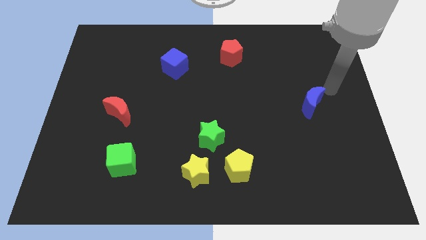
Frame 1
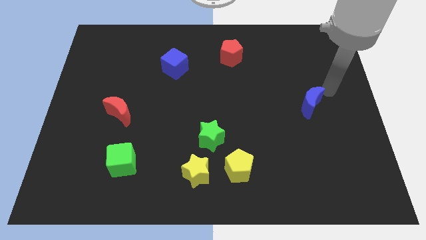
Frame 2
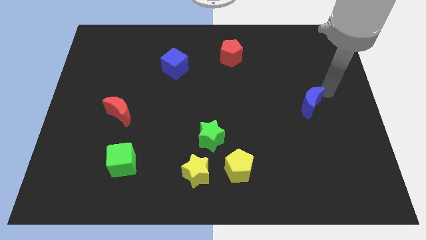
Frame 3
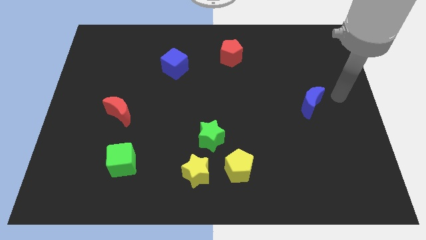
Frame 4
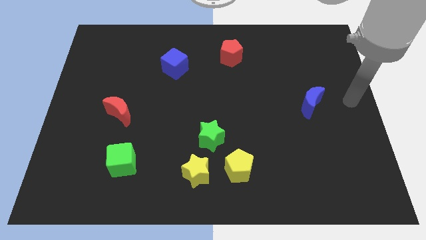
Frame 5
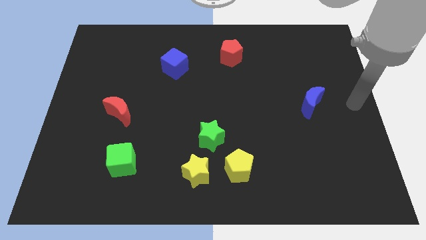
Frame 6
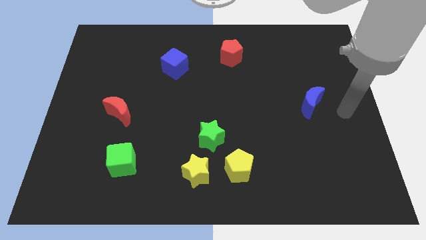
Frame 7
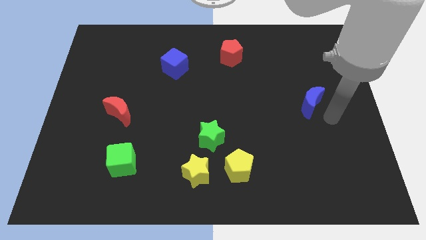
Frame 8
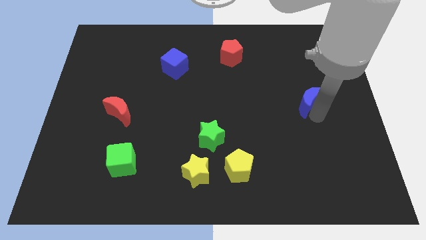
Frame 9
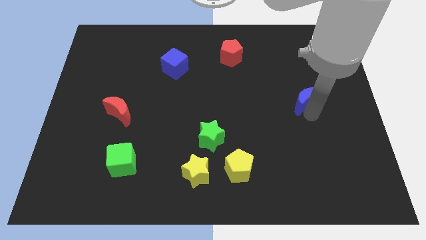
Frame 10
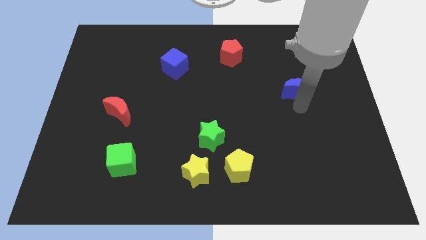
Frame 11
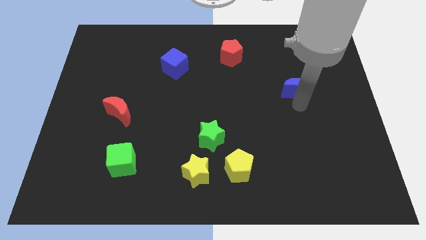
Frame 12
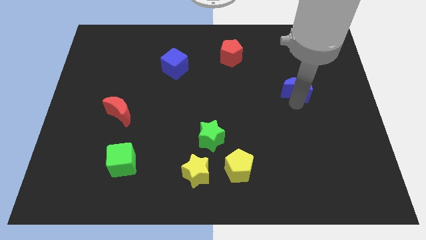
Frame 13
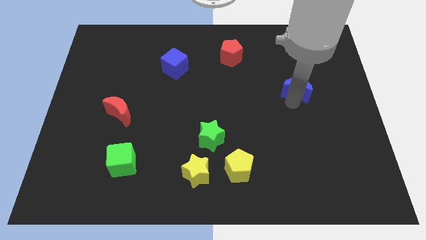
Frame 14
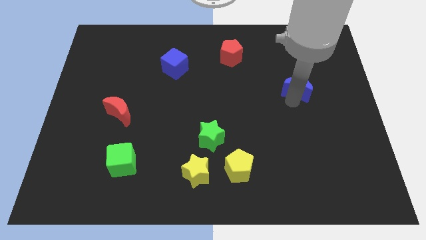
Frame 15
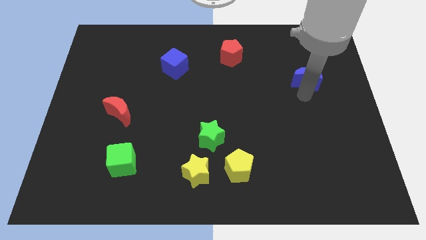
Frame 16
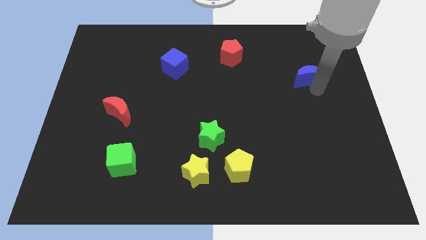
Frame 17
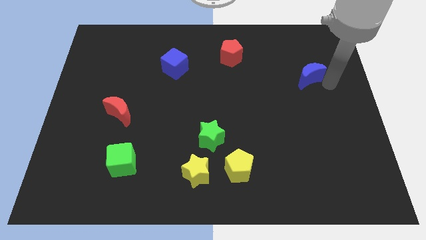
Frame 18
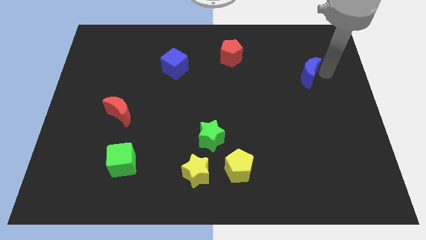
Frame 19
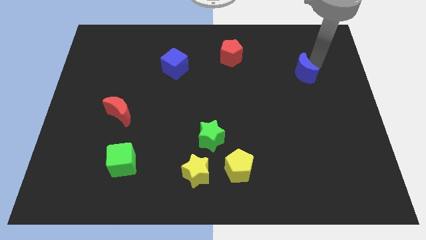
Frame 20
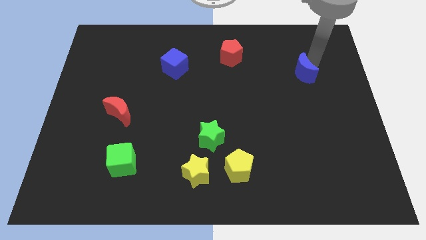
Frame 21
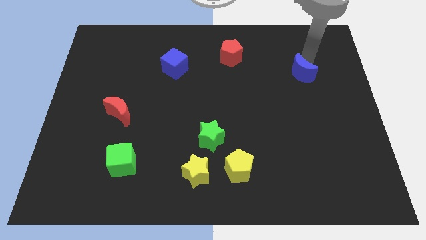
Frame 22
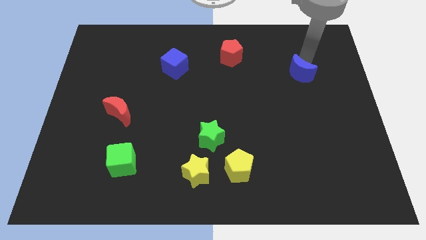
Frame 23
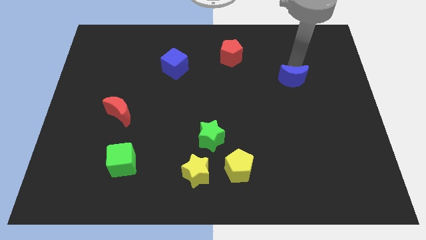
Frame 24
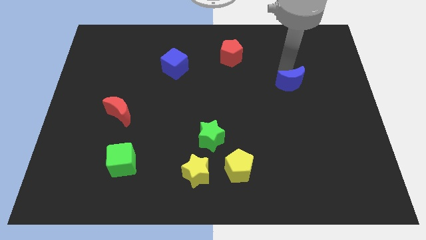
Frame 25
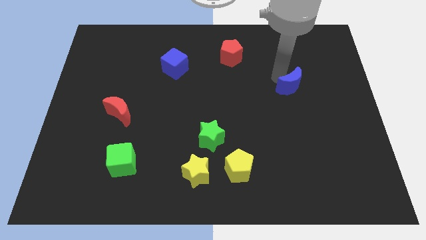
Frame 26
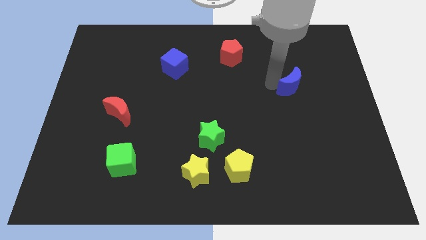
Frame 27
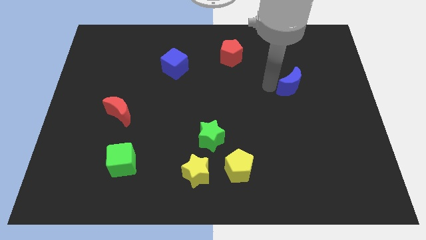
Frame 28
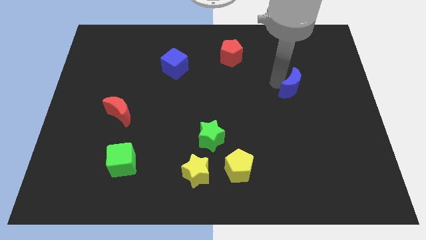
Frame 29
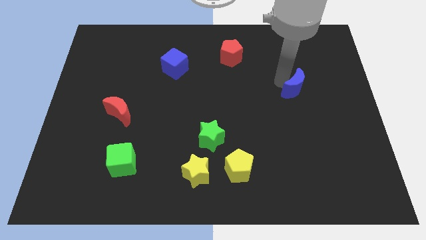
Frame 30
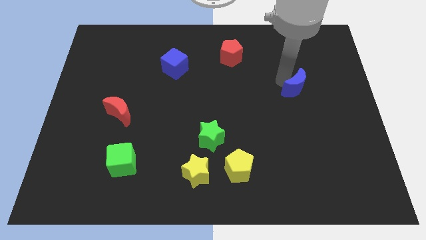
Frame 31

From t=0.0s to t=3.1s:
rotate the blue crescent at the right side of the board

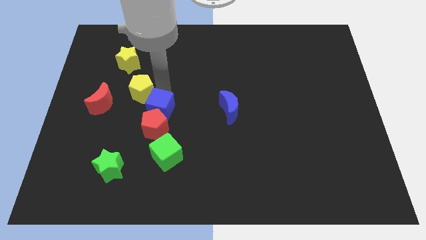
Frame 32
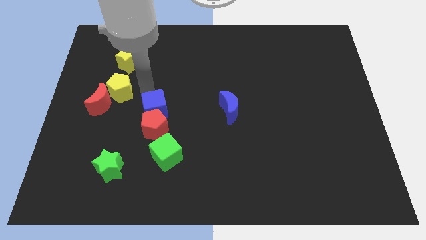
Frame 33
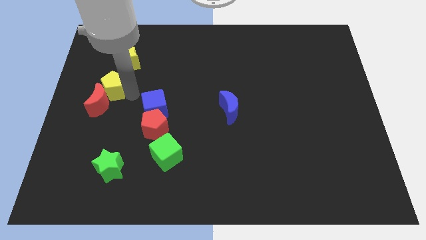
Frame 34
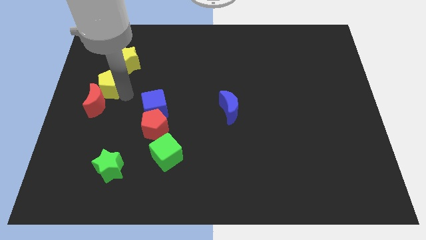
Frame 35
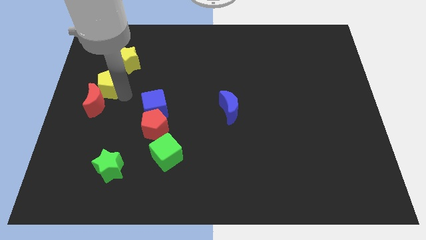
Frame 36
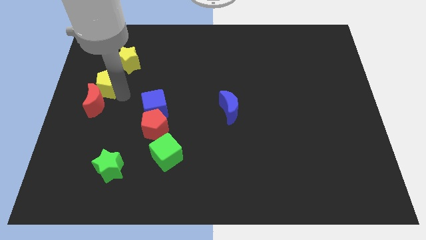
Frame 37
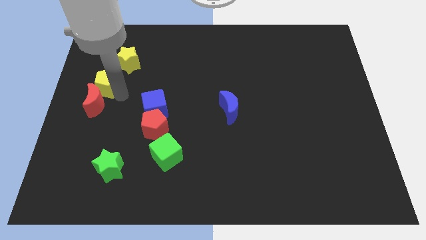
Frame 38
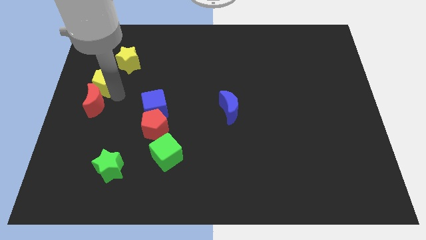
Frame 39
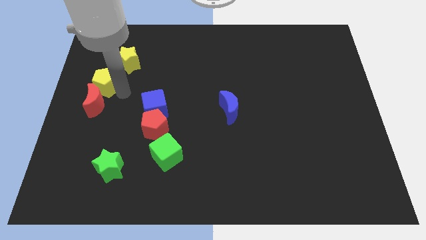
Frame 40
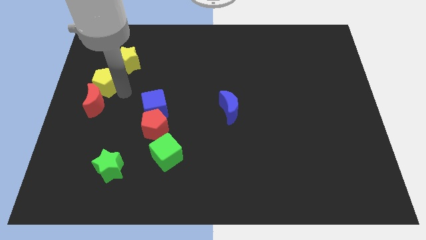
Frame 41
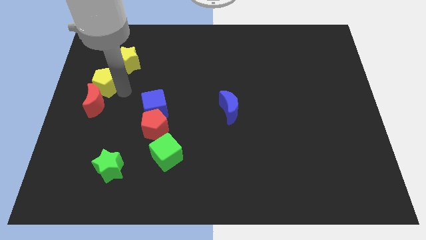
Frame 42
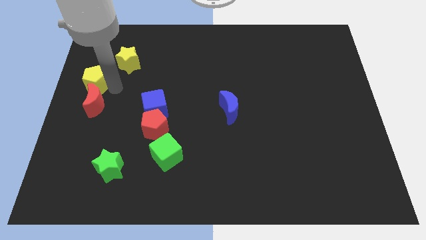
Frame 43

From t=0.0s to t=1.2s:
slide the yellow pentagon to the top of the red moon

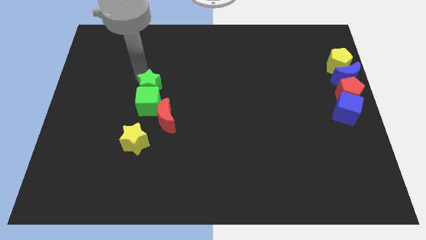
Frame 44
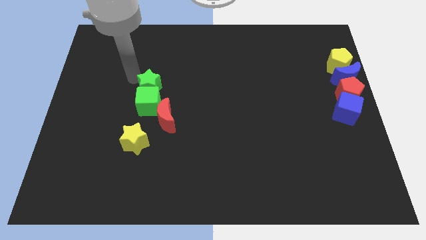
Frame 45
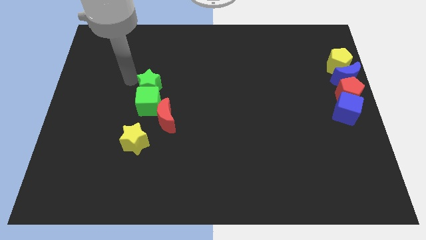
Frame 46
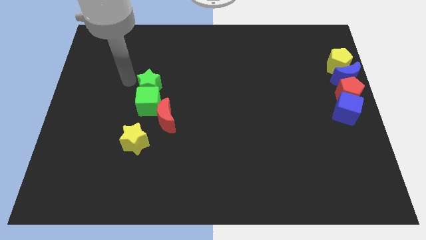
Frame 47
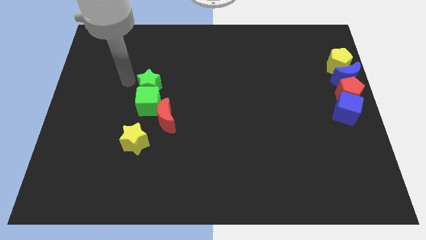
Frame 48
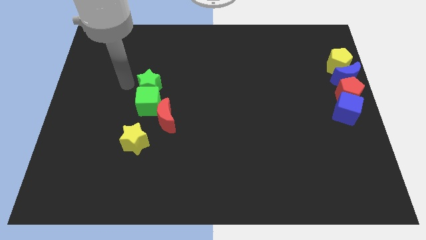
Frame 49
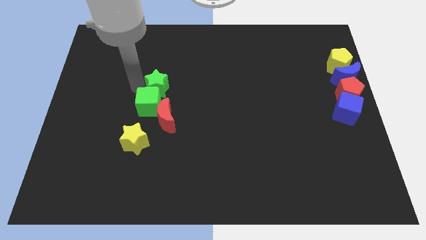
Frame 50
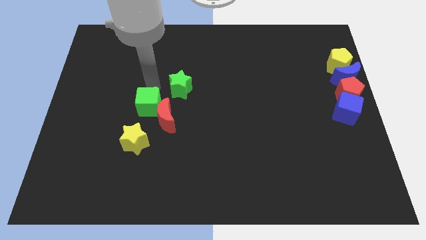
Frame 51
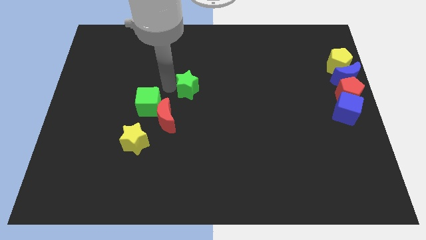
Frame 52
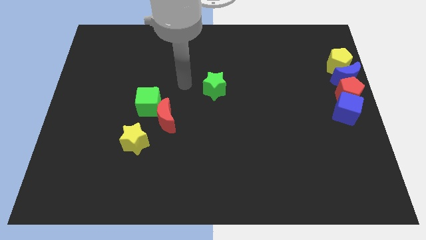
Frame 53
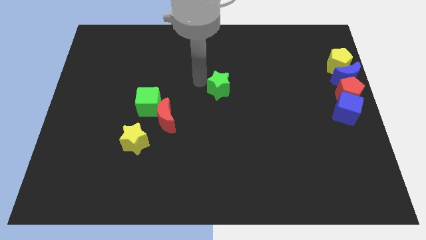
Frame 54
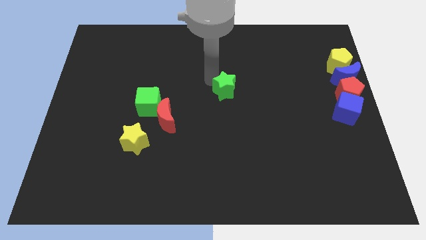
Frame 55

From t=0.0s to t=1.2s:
separate the green star from the green cube

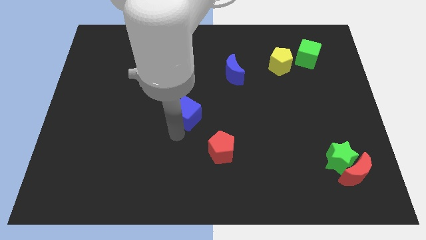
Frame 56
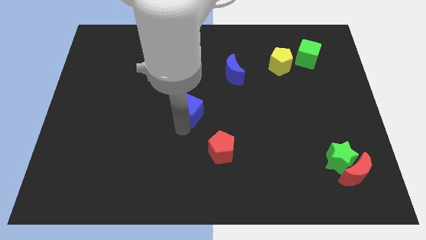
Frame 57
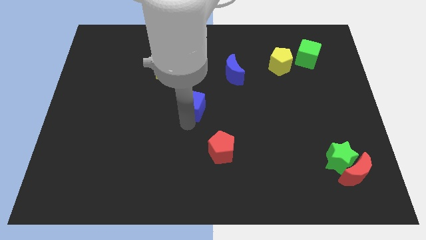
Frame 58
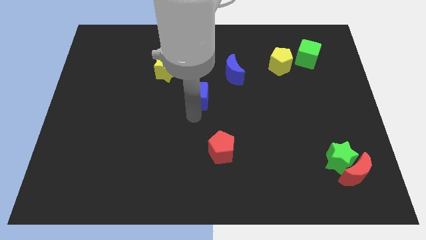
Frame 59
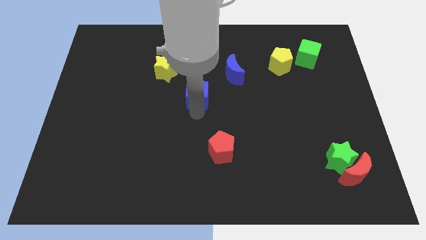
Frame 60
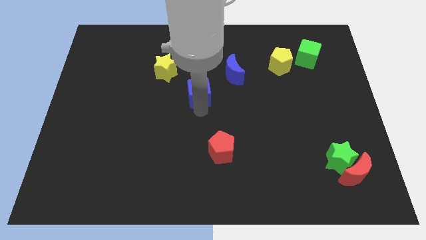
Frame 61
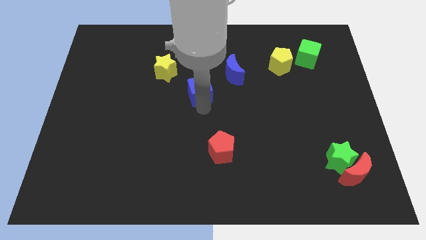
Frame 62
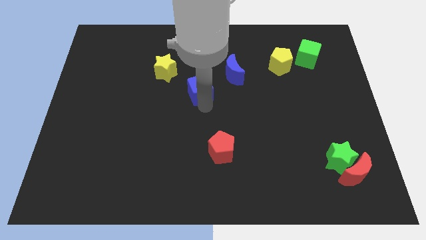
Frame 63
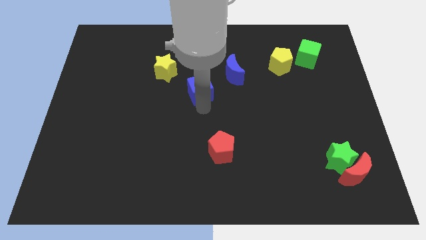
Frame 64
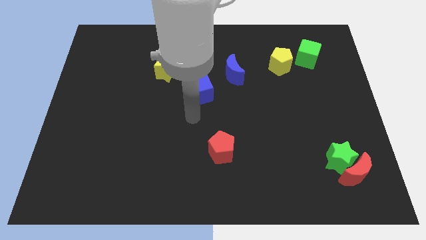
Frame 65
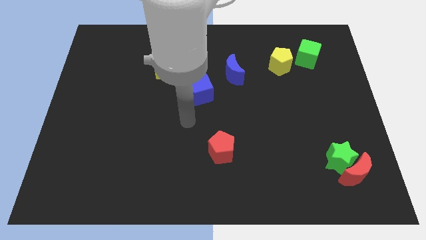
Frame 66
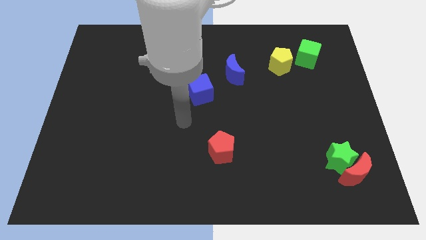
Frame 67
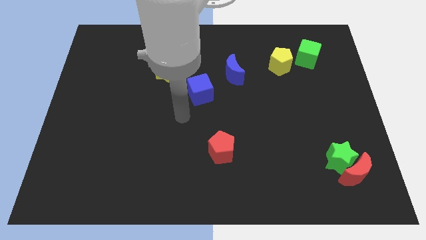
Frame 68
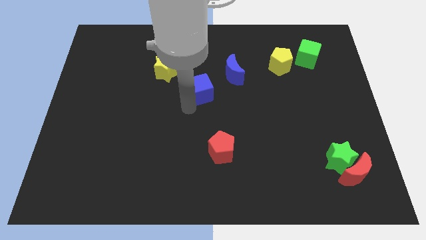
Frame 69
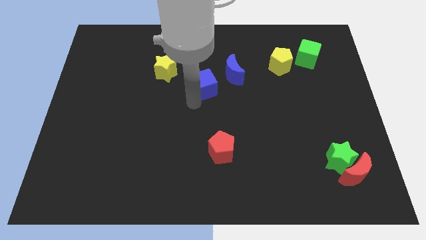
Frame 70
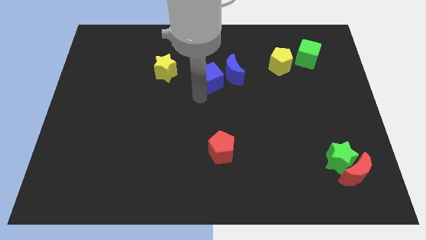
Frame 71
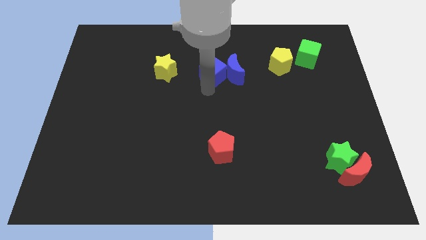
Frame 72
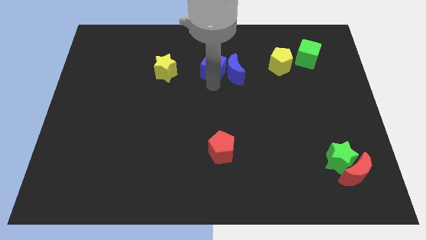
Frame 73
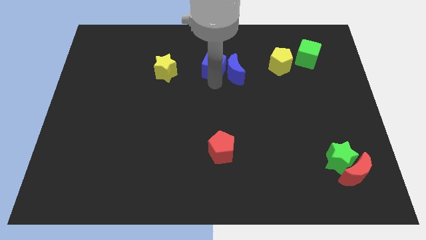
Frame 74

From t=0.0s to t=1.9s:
move the blue cube to the left of the blue crescent

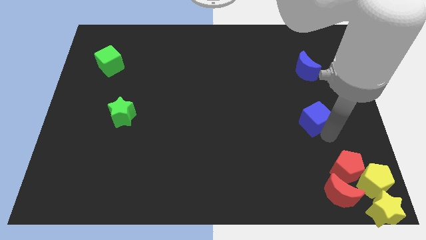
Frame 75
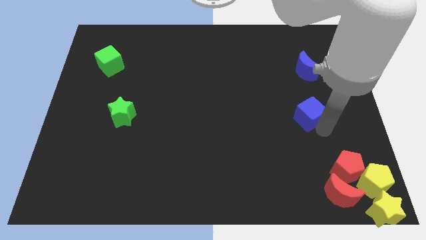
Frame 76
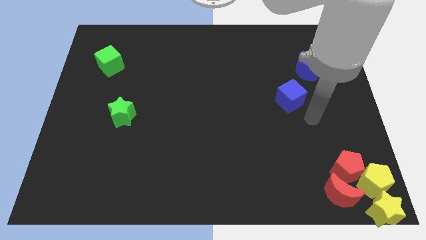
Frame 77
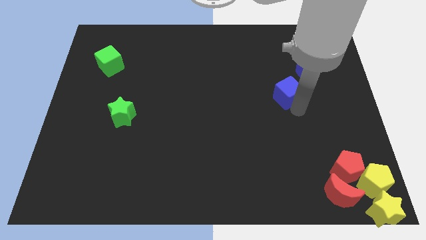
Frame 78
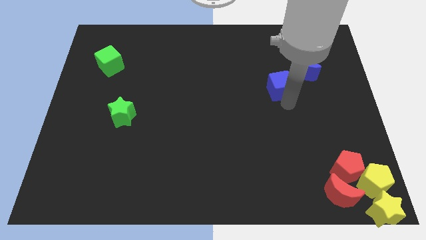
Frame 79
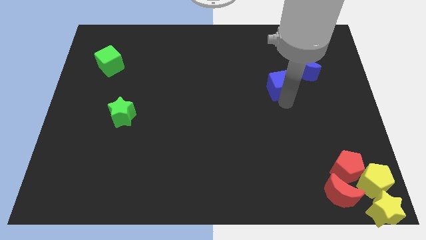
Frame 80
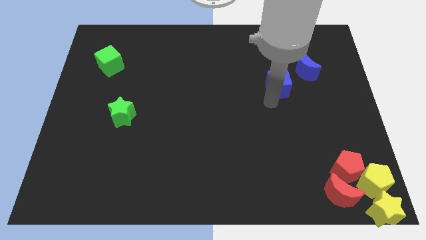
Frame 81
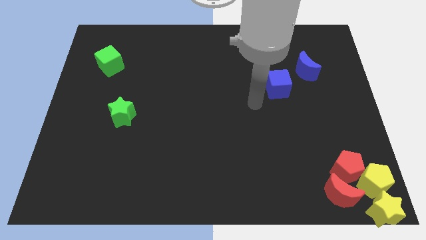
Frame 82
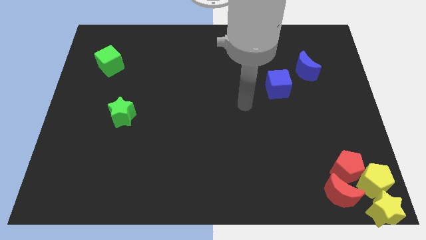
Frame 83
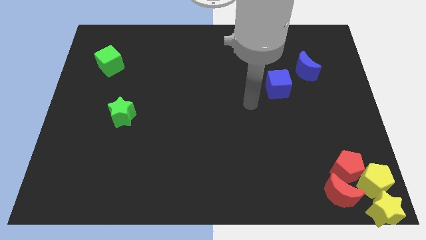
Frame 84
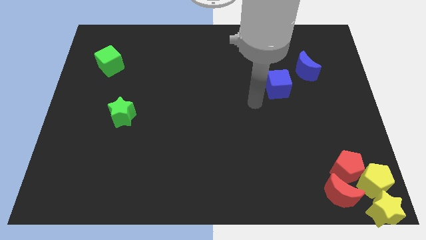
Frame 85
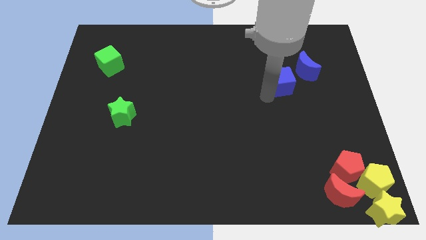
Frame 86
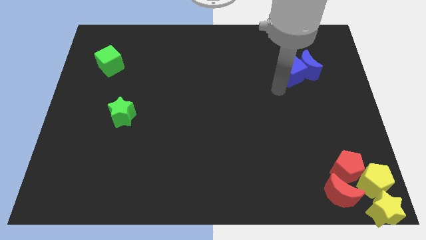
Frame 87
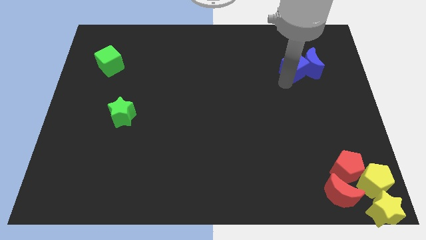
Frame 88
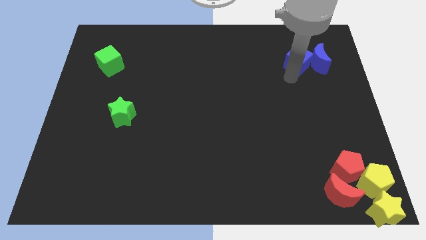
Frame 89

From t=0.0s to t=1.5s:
push the blue cube into the blue moon
